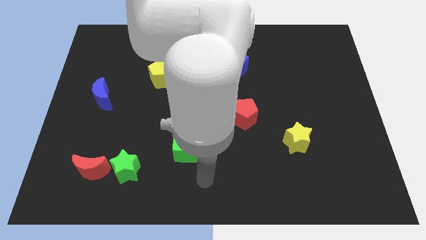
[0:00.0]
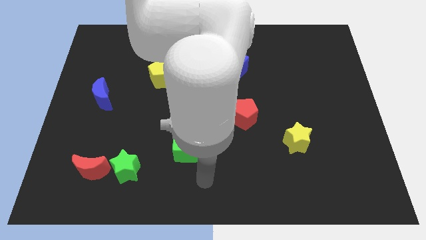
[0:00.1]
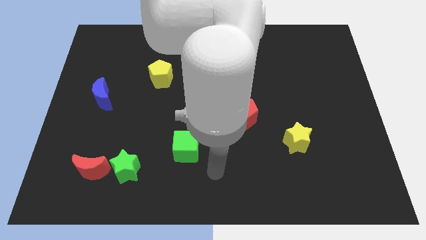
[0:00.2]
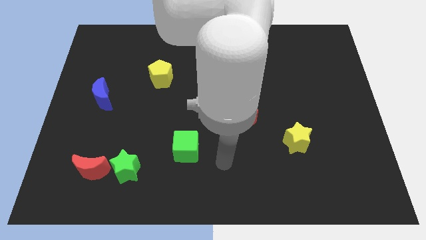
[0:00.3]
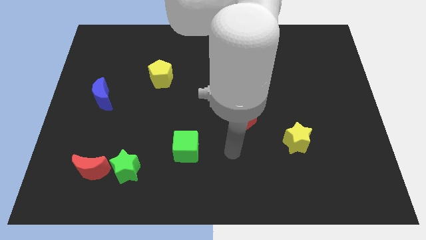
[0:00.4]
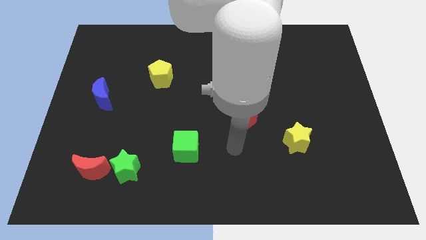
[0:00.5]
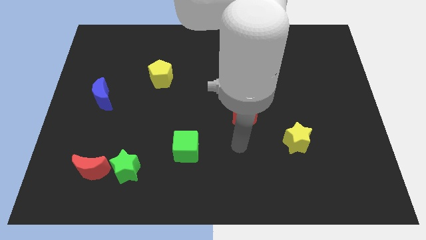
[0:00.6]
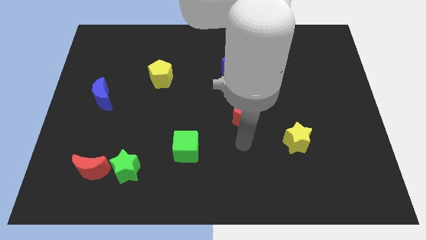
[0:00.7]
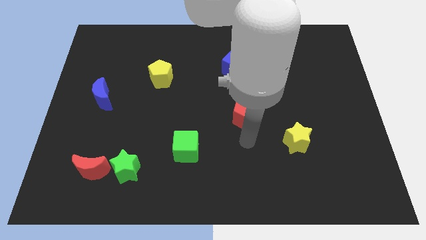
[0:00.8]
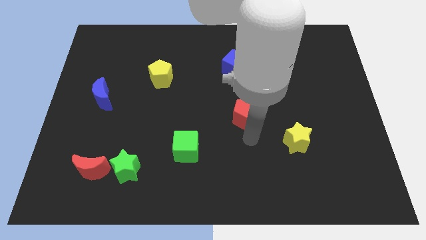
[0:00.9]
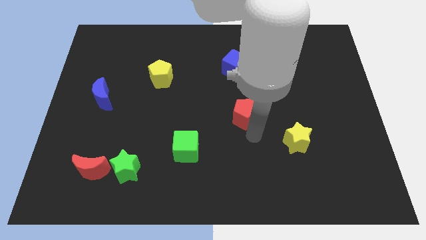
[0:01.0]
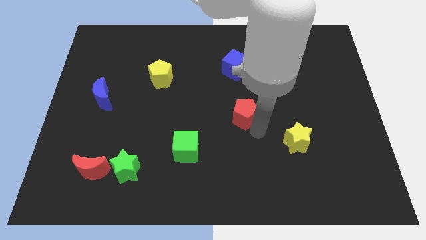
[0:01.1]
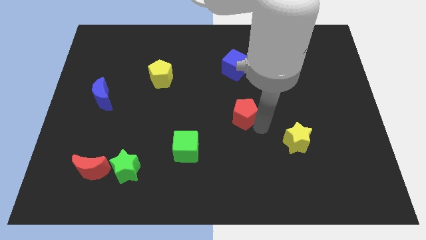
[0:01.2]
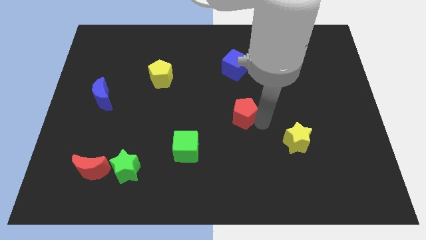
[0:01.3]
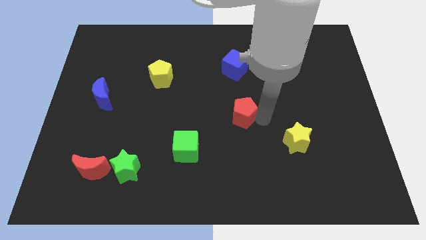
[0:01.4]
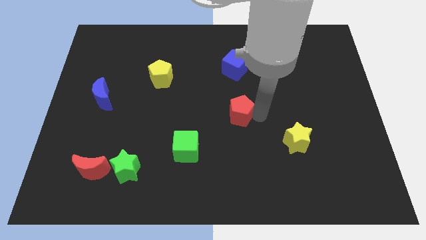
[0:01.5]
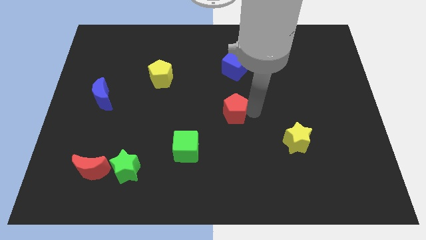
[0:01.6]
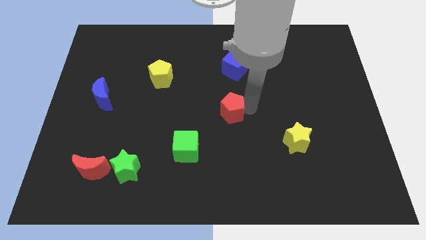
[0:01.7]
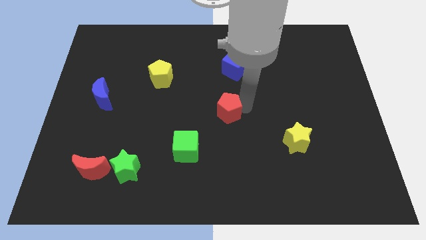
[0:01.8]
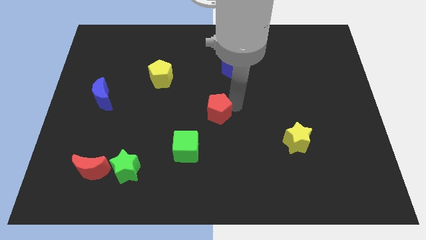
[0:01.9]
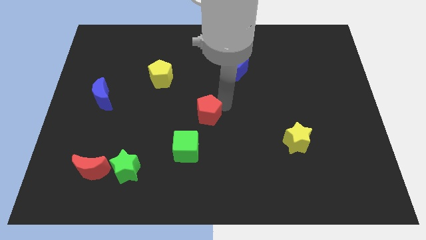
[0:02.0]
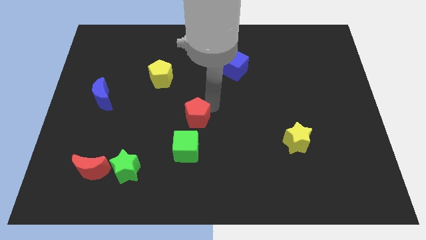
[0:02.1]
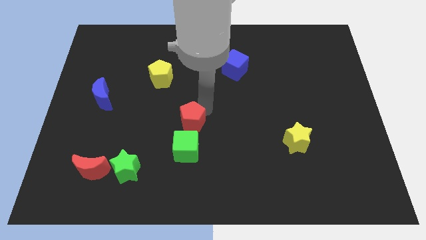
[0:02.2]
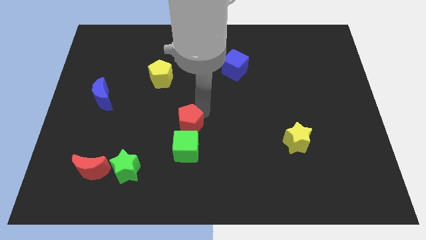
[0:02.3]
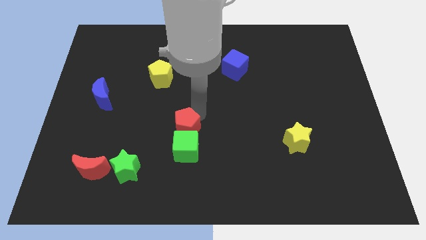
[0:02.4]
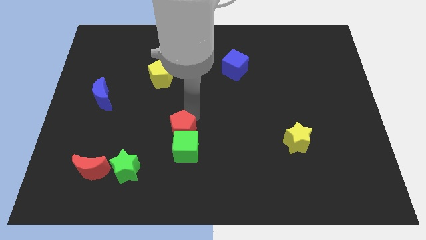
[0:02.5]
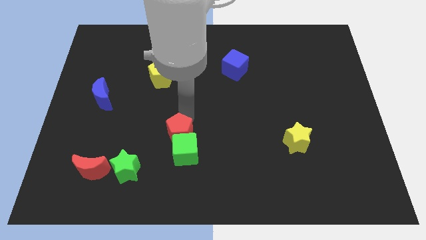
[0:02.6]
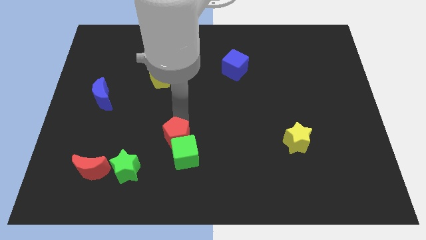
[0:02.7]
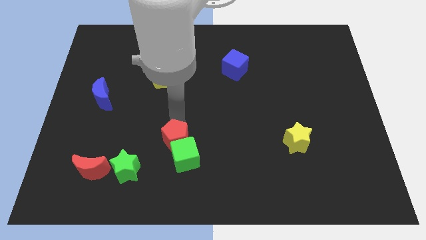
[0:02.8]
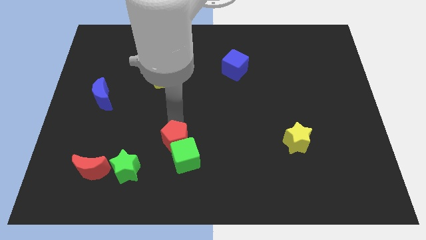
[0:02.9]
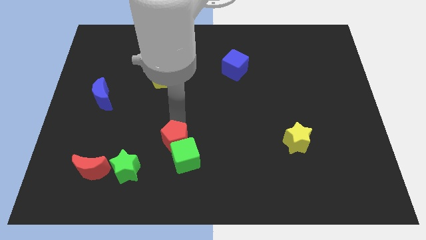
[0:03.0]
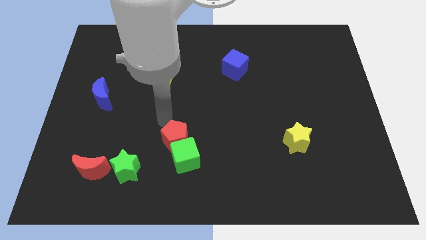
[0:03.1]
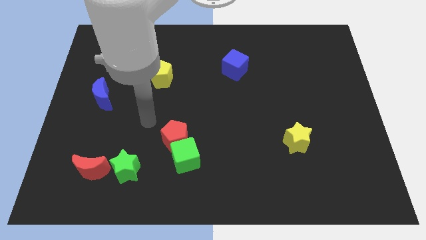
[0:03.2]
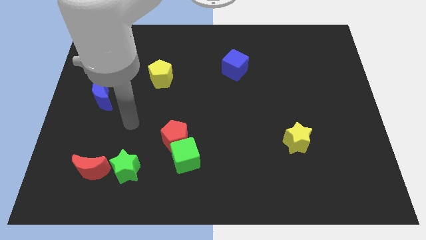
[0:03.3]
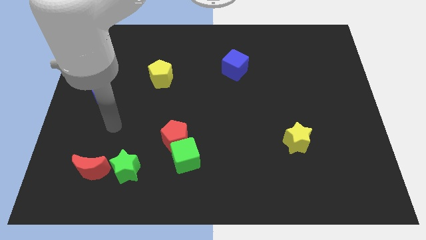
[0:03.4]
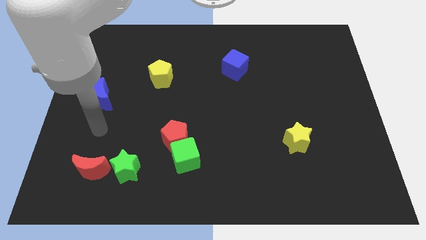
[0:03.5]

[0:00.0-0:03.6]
push the red pentagon into the green cube

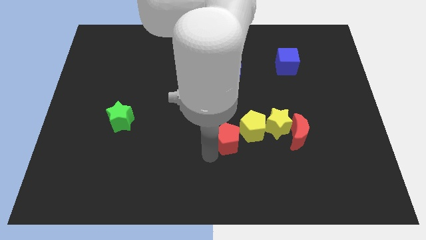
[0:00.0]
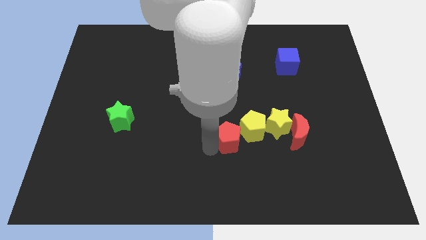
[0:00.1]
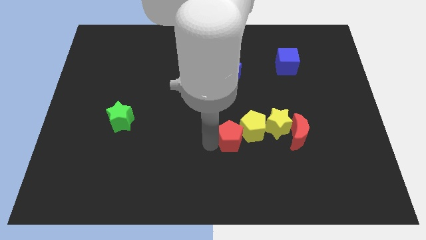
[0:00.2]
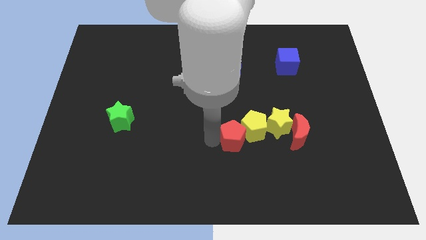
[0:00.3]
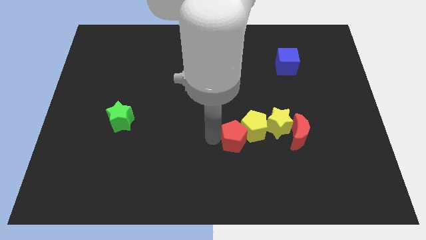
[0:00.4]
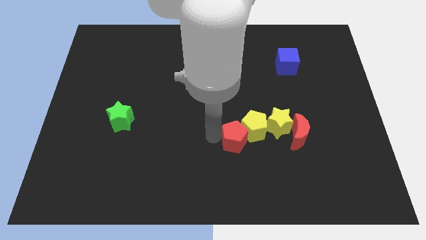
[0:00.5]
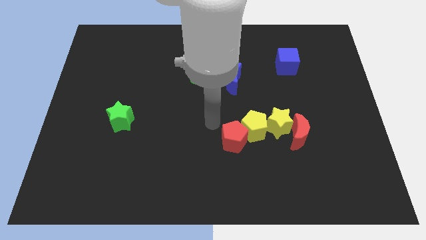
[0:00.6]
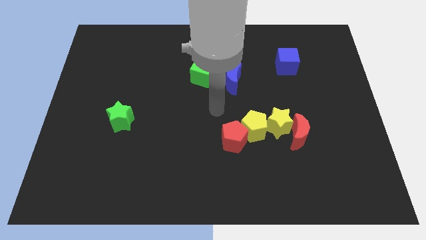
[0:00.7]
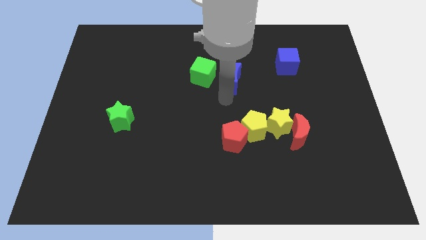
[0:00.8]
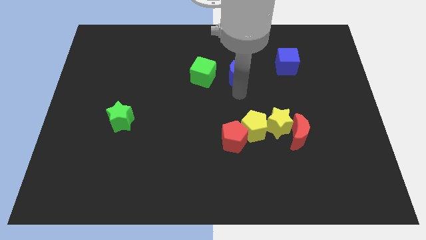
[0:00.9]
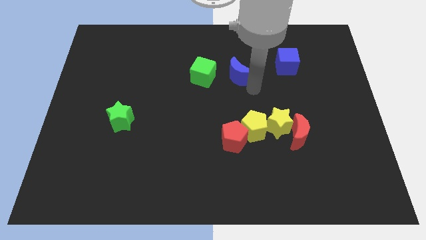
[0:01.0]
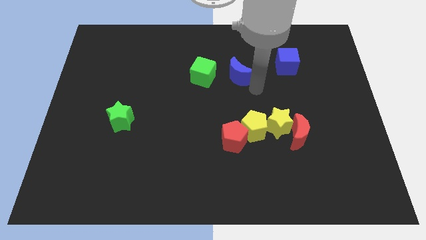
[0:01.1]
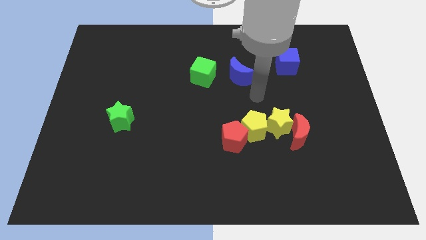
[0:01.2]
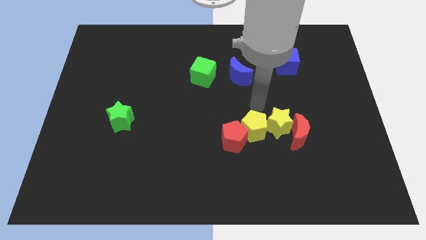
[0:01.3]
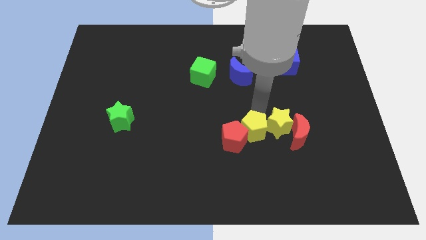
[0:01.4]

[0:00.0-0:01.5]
slightly touch down the blue moon

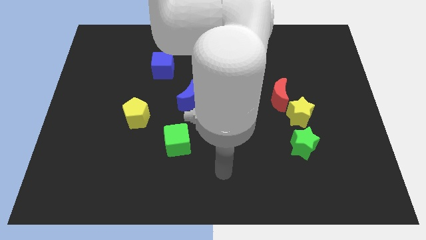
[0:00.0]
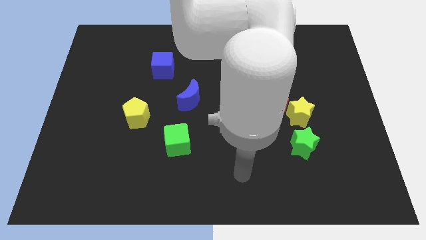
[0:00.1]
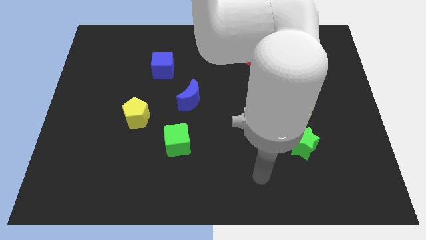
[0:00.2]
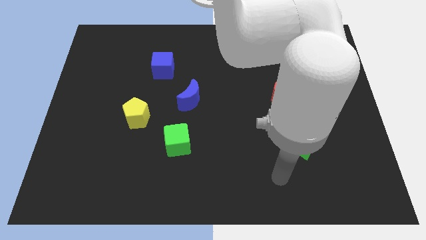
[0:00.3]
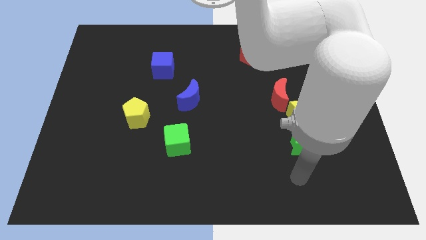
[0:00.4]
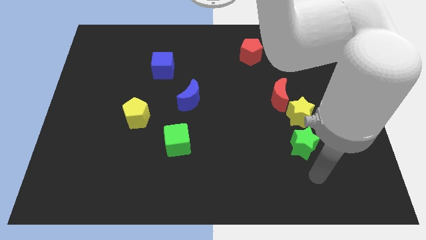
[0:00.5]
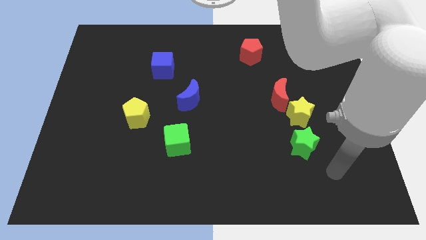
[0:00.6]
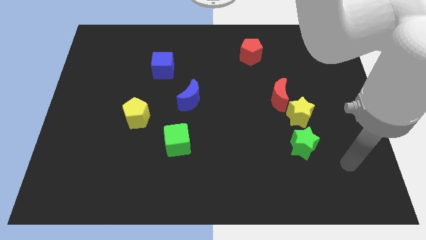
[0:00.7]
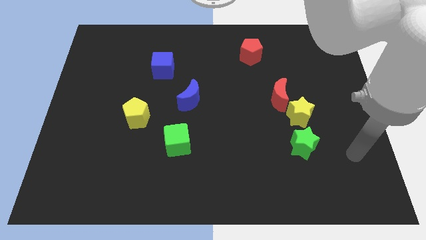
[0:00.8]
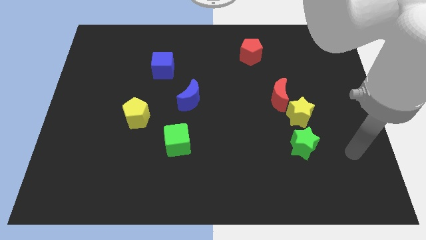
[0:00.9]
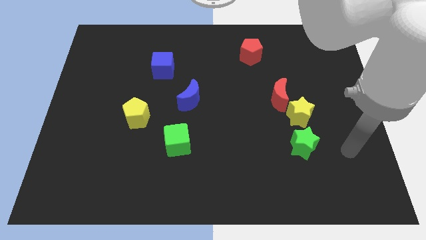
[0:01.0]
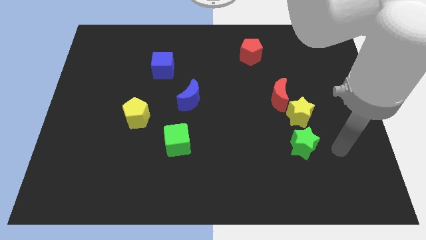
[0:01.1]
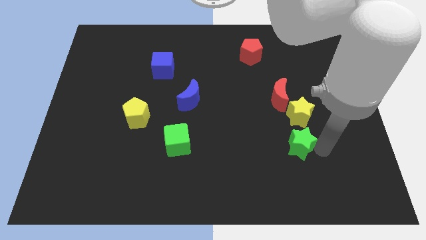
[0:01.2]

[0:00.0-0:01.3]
push your arm towards the right of the green star

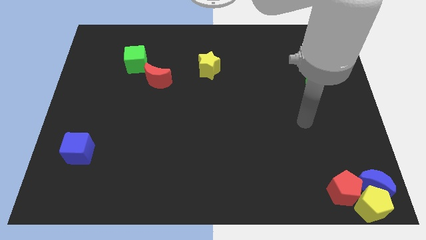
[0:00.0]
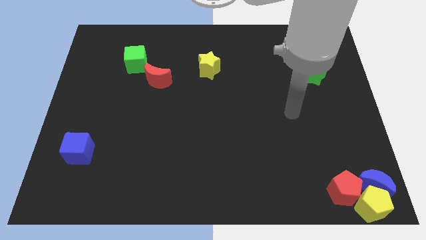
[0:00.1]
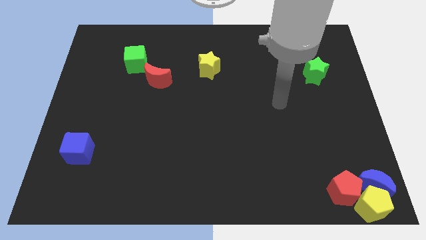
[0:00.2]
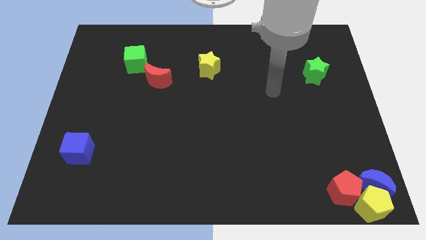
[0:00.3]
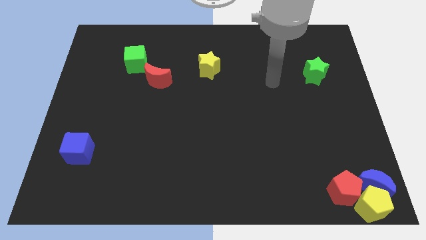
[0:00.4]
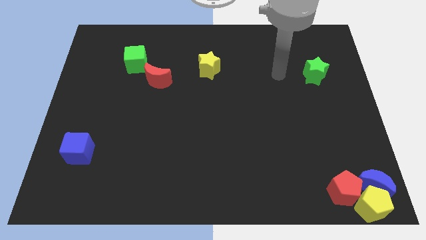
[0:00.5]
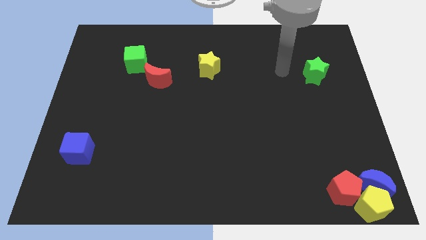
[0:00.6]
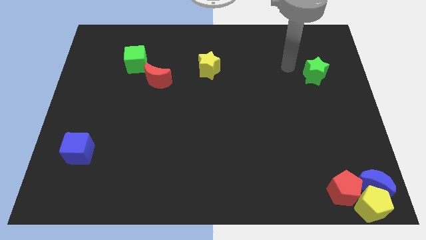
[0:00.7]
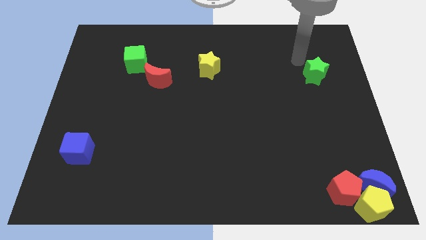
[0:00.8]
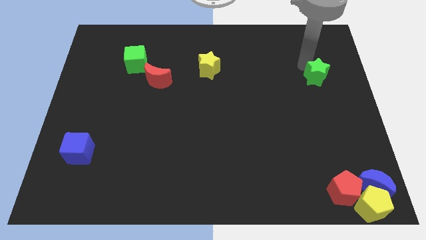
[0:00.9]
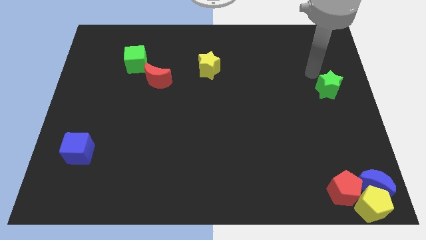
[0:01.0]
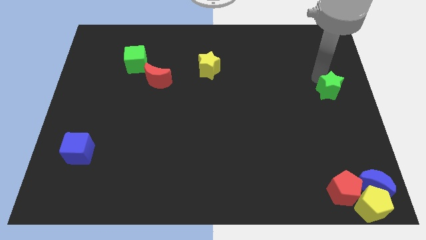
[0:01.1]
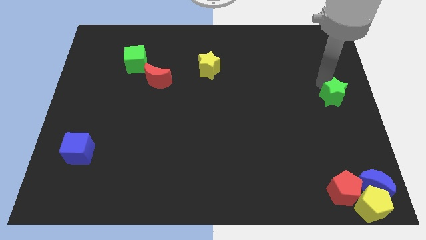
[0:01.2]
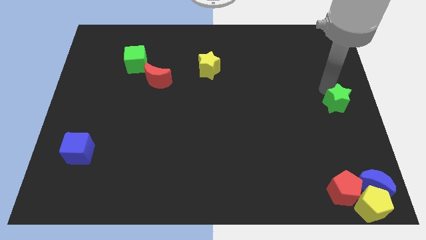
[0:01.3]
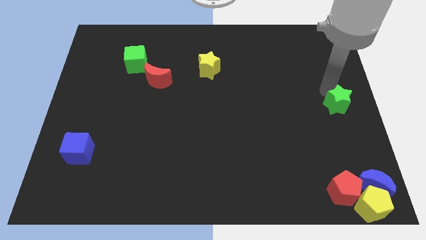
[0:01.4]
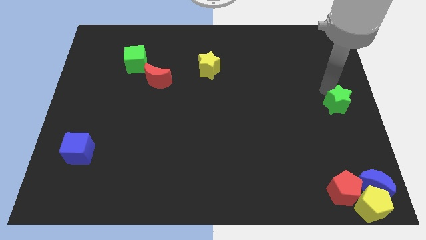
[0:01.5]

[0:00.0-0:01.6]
push the green star towards the bottom side of the board

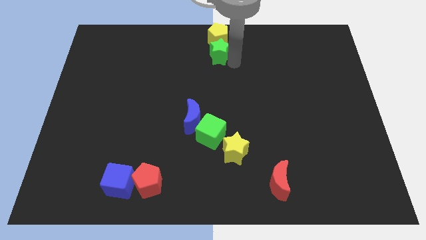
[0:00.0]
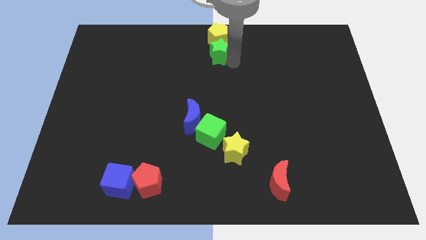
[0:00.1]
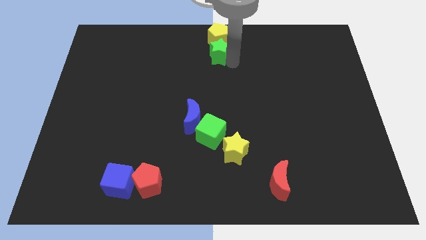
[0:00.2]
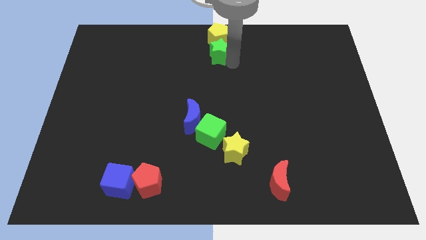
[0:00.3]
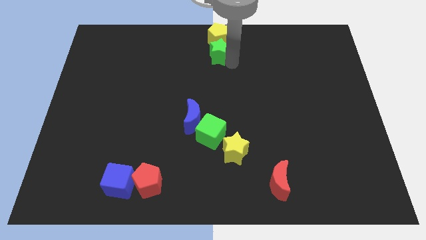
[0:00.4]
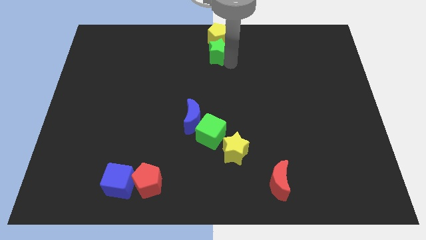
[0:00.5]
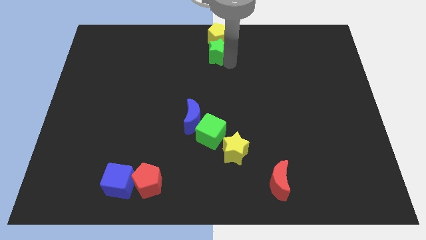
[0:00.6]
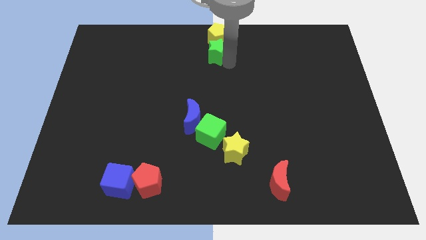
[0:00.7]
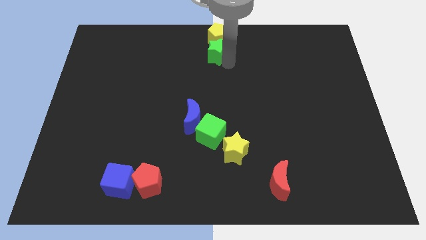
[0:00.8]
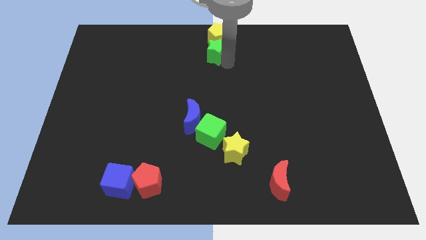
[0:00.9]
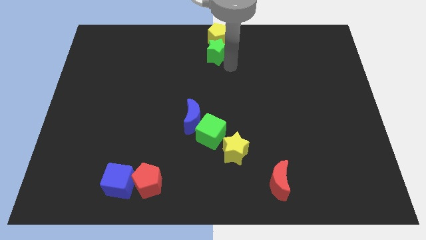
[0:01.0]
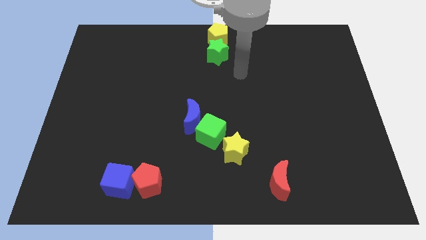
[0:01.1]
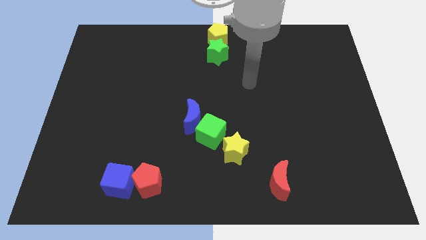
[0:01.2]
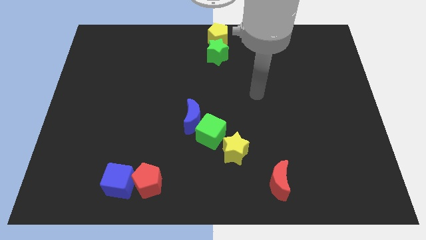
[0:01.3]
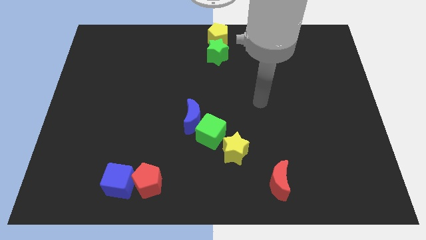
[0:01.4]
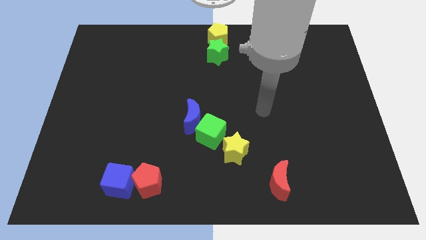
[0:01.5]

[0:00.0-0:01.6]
move the arm away from the green star
